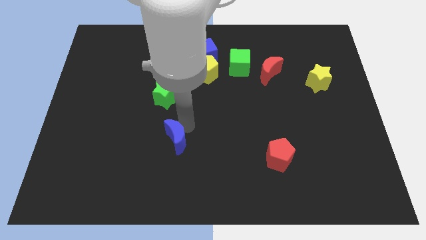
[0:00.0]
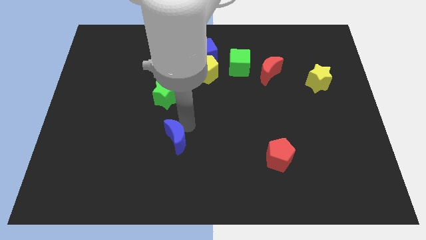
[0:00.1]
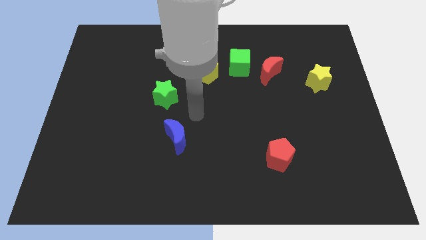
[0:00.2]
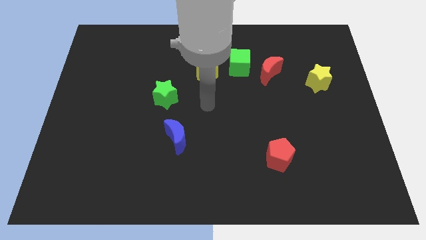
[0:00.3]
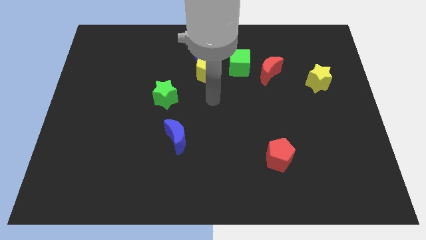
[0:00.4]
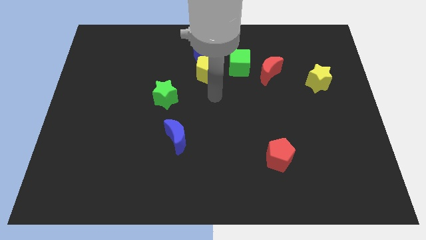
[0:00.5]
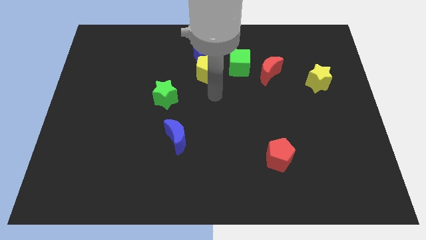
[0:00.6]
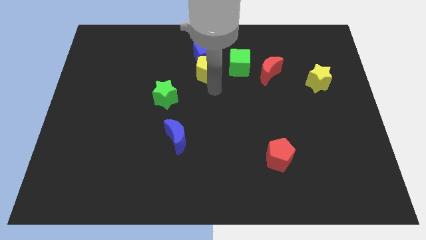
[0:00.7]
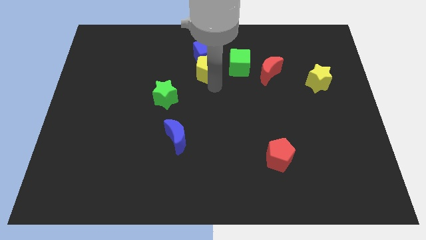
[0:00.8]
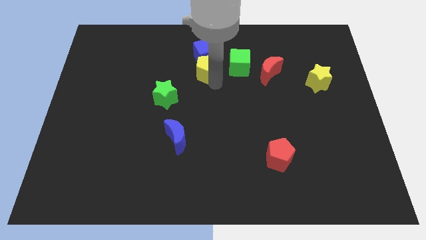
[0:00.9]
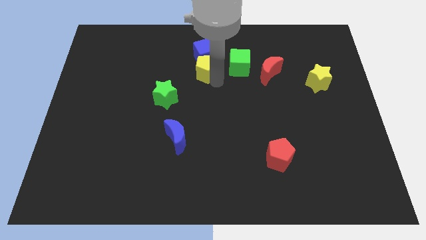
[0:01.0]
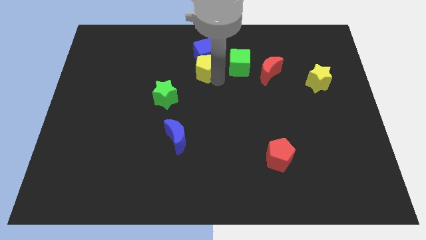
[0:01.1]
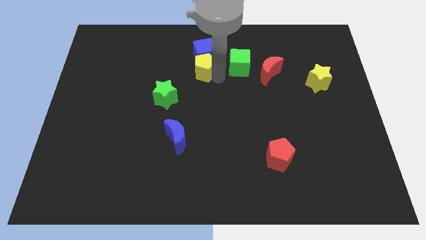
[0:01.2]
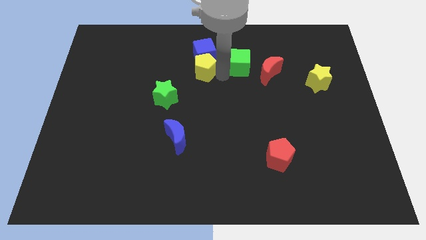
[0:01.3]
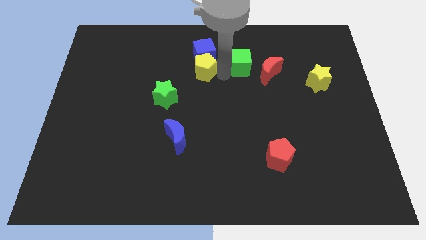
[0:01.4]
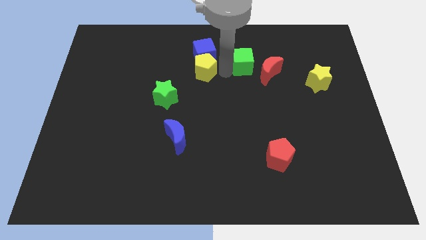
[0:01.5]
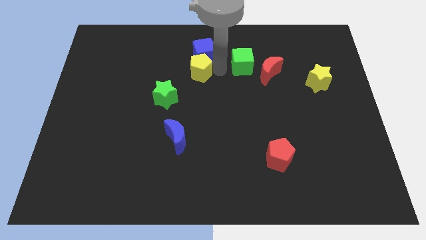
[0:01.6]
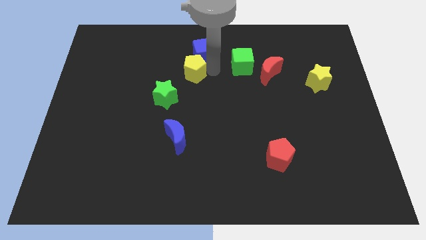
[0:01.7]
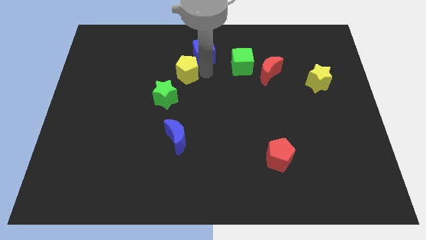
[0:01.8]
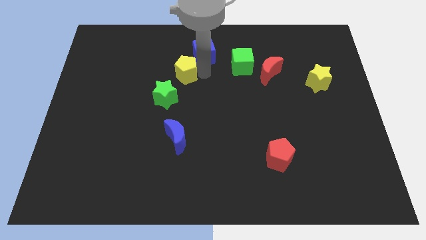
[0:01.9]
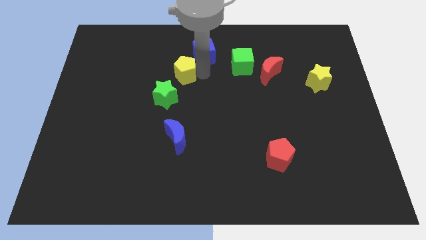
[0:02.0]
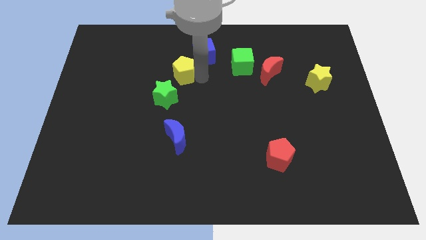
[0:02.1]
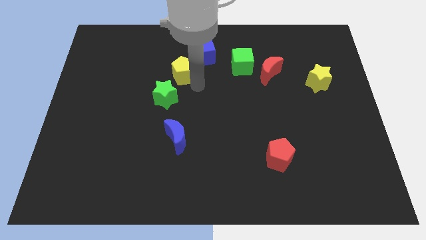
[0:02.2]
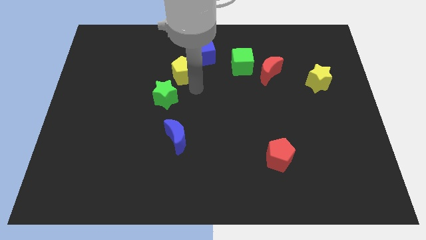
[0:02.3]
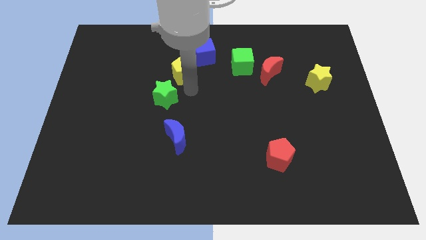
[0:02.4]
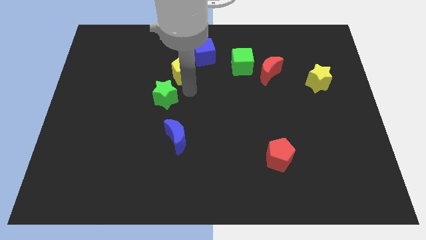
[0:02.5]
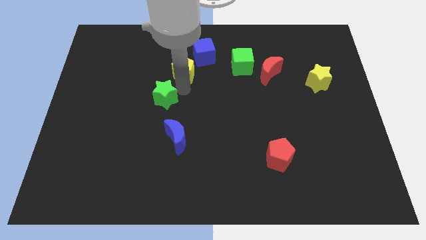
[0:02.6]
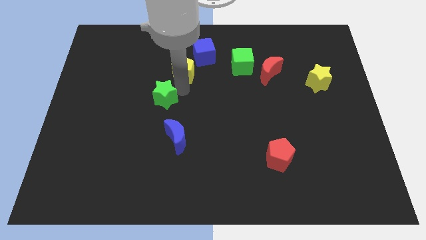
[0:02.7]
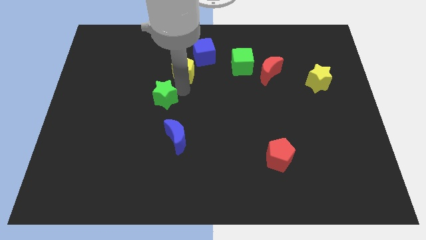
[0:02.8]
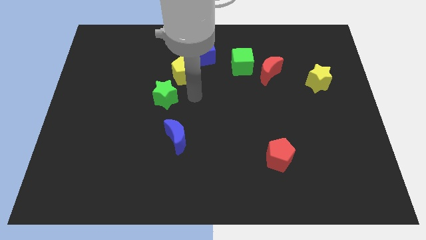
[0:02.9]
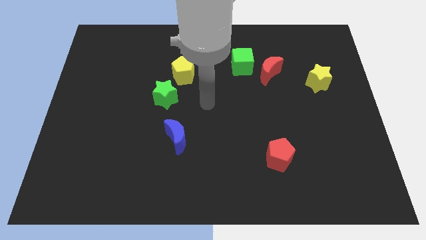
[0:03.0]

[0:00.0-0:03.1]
push the green star slightly towards the left

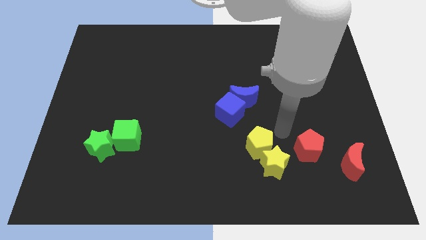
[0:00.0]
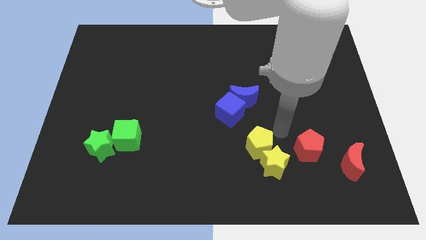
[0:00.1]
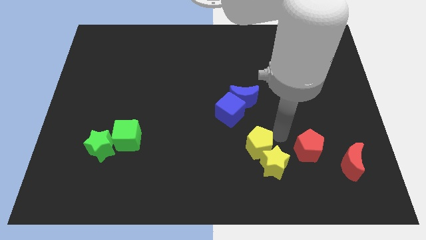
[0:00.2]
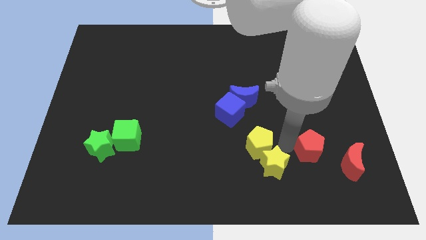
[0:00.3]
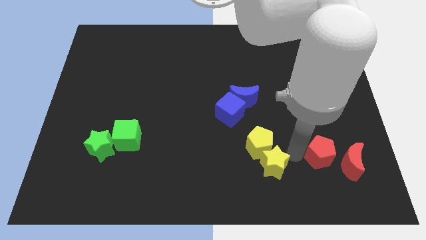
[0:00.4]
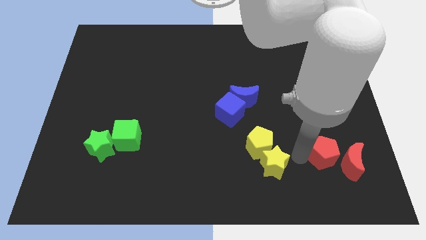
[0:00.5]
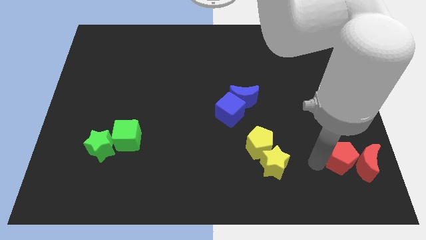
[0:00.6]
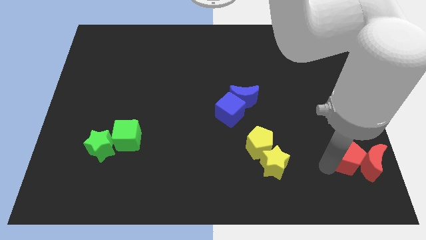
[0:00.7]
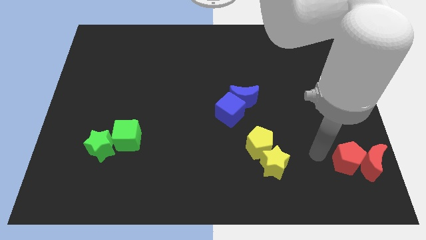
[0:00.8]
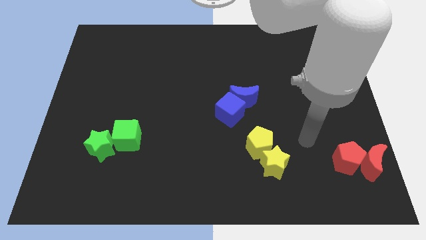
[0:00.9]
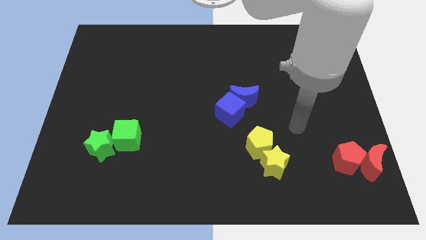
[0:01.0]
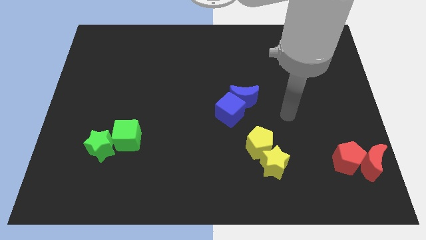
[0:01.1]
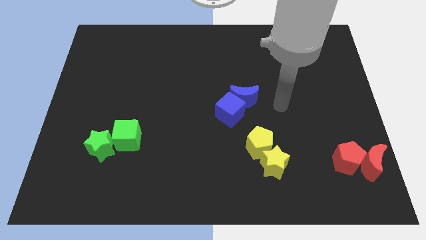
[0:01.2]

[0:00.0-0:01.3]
push red pentagon with red crescent to the bottom right

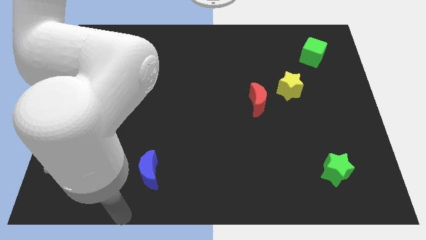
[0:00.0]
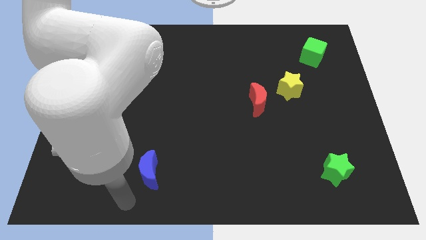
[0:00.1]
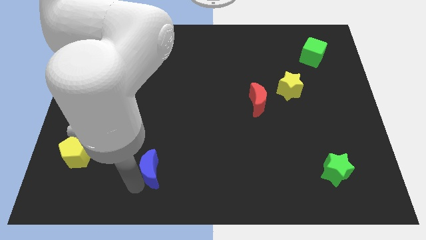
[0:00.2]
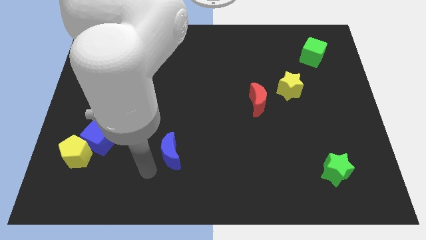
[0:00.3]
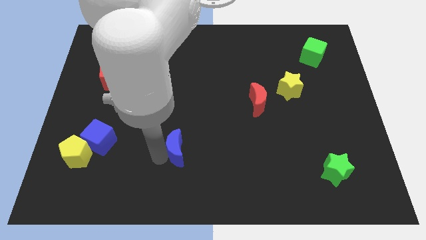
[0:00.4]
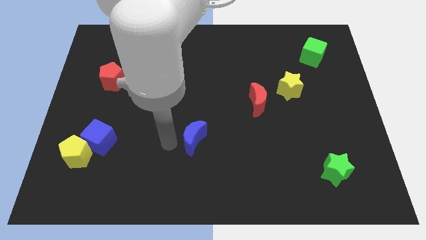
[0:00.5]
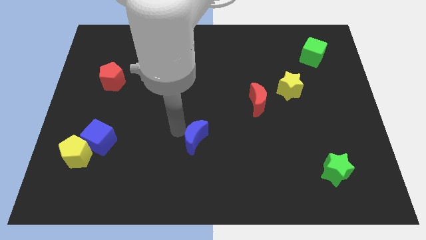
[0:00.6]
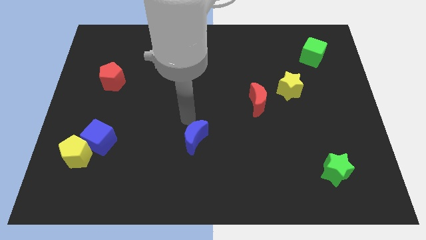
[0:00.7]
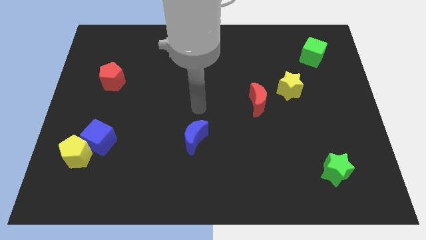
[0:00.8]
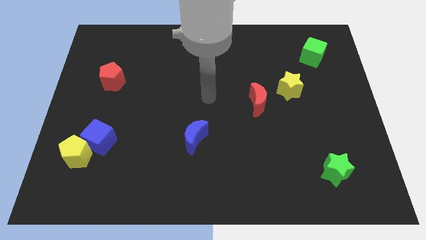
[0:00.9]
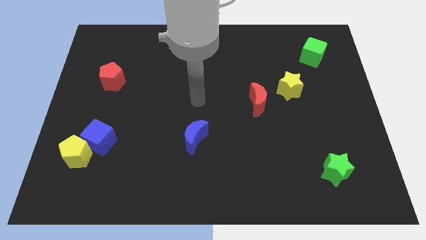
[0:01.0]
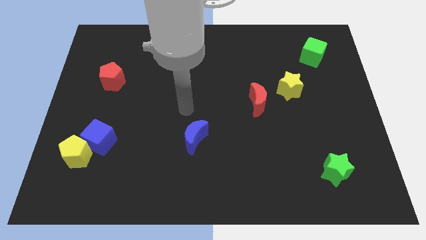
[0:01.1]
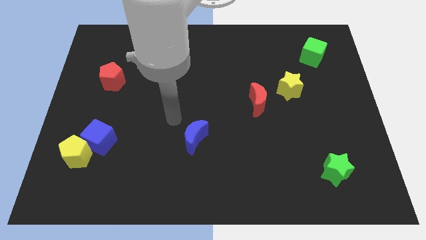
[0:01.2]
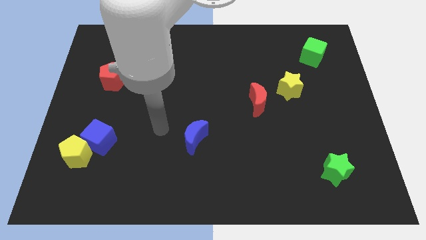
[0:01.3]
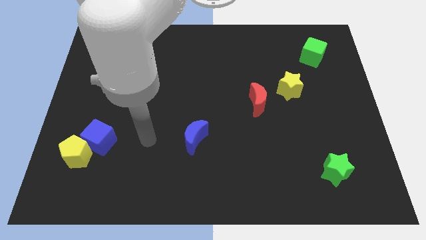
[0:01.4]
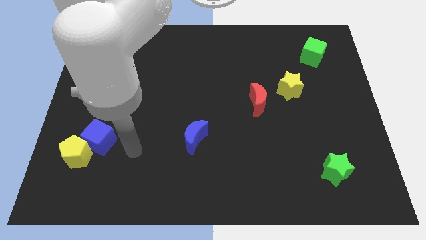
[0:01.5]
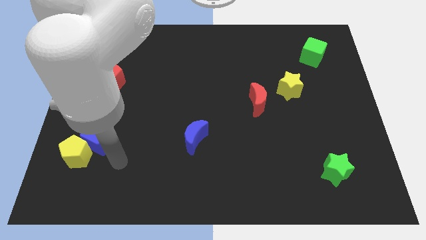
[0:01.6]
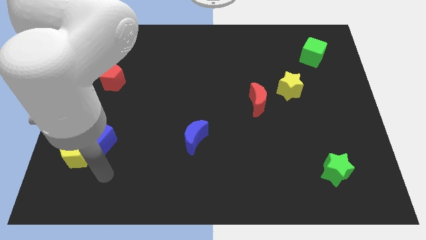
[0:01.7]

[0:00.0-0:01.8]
push blue crescent

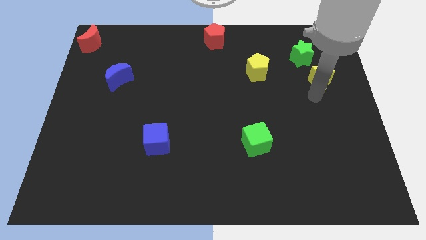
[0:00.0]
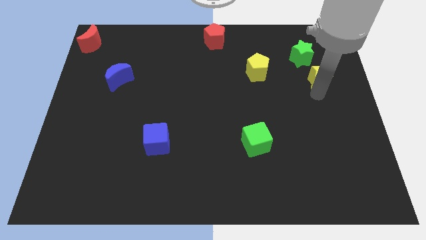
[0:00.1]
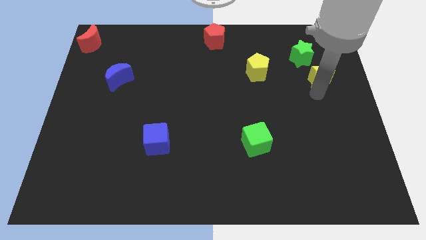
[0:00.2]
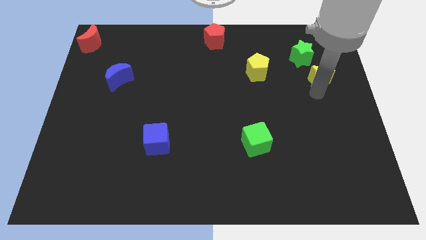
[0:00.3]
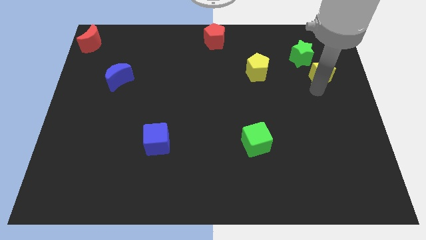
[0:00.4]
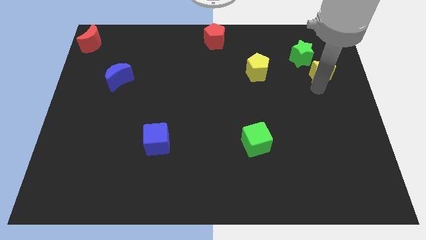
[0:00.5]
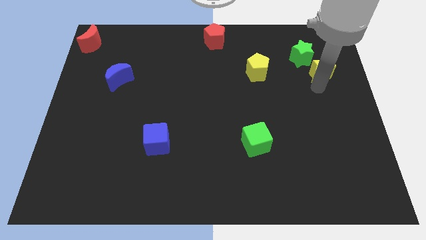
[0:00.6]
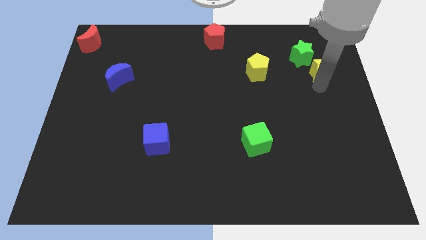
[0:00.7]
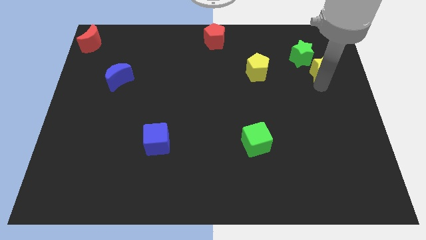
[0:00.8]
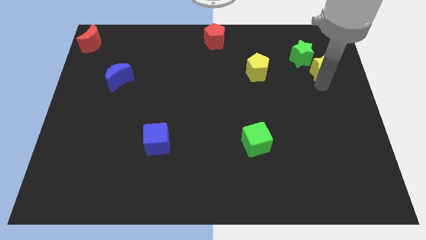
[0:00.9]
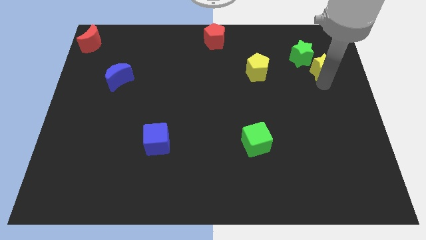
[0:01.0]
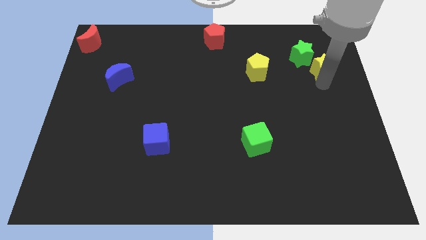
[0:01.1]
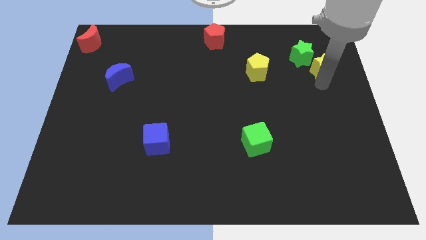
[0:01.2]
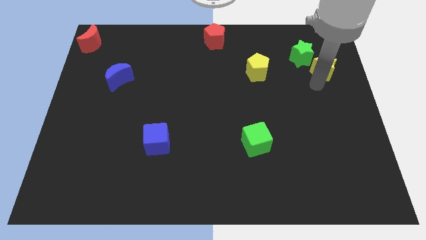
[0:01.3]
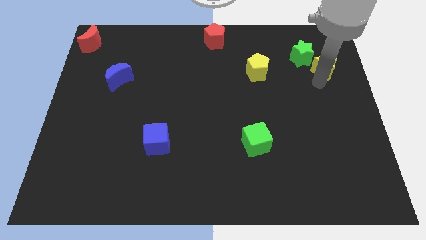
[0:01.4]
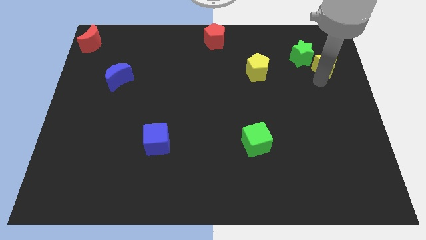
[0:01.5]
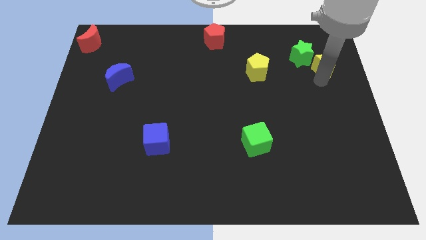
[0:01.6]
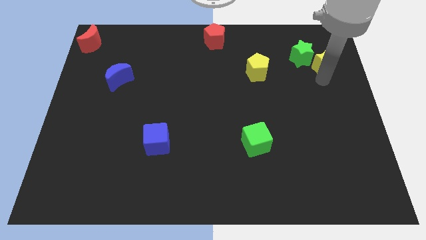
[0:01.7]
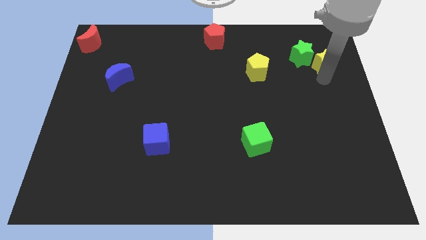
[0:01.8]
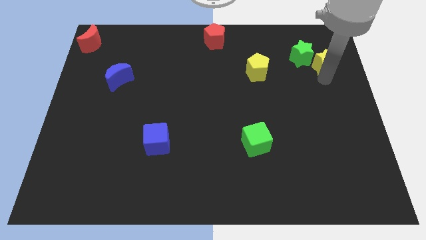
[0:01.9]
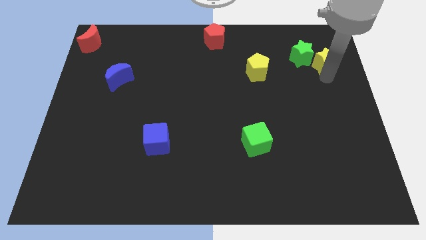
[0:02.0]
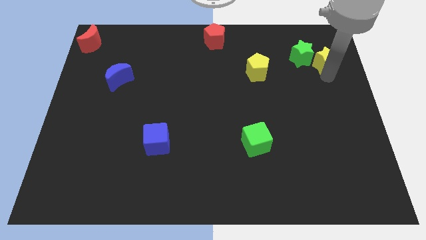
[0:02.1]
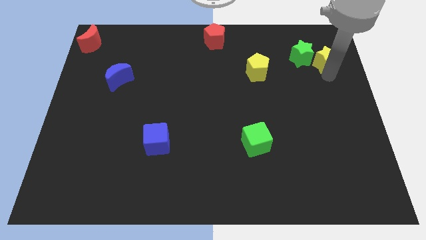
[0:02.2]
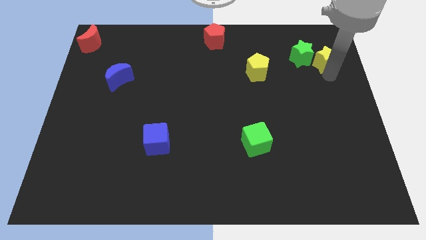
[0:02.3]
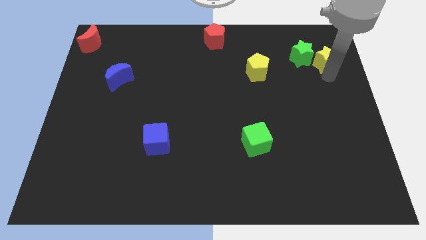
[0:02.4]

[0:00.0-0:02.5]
place the yellow star to the right side of the green star

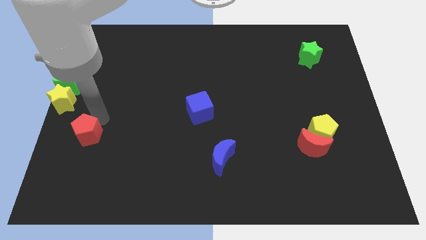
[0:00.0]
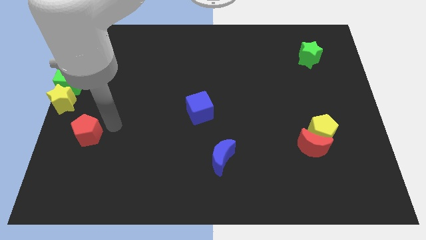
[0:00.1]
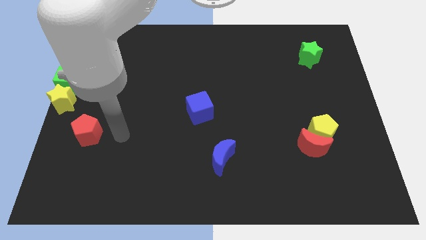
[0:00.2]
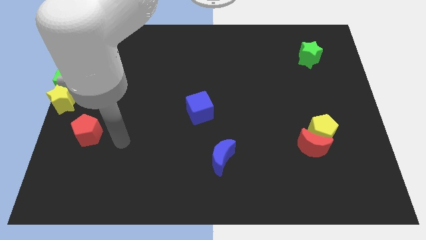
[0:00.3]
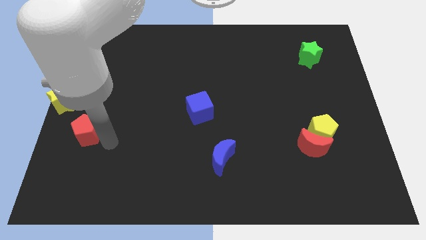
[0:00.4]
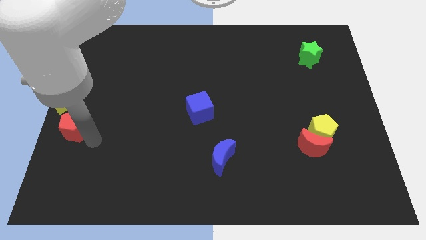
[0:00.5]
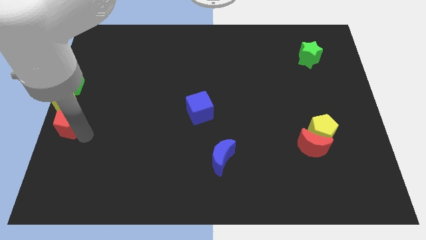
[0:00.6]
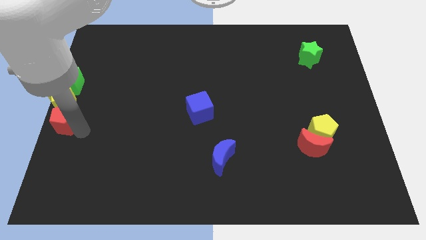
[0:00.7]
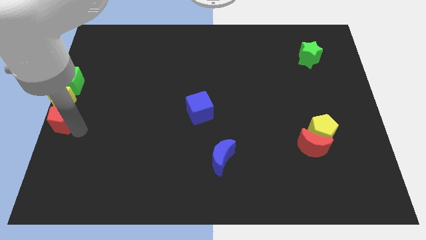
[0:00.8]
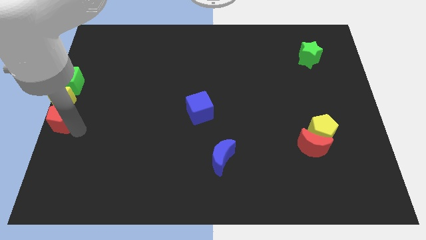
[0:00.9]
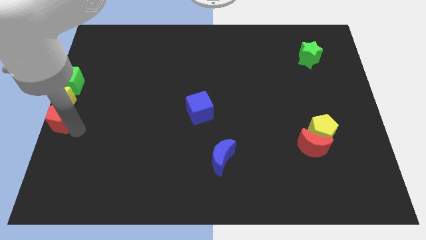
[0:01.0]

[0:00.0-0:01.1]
move the red pentagon to the bottom of the yellow star
